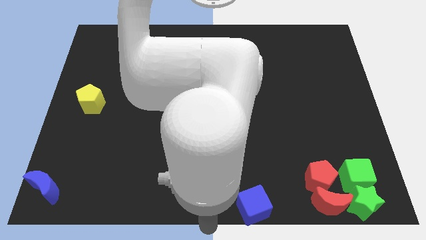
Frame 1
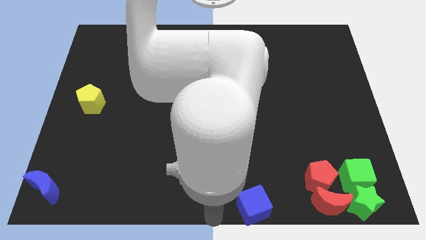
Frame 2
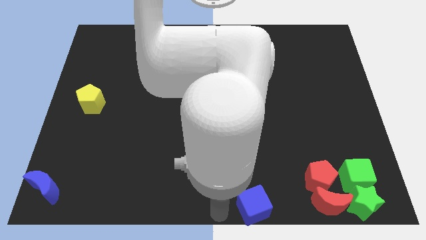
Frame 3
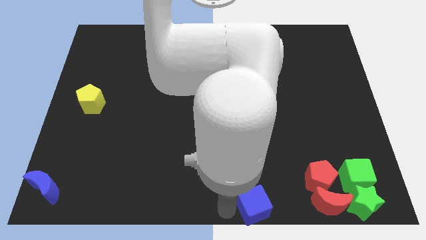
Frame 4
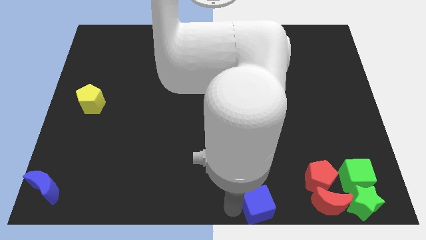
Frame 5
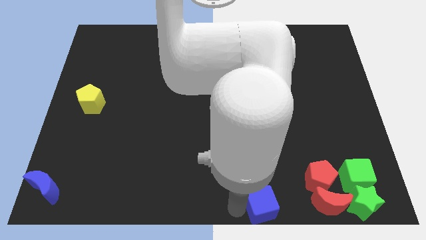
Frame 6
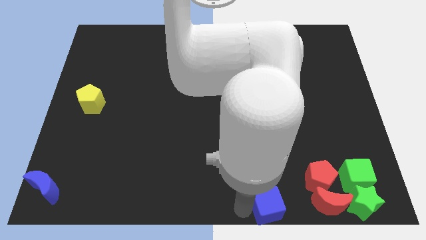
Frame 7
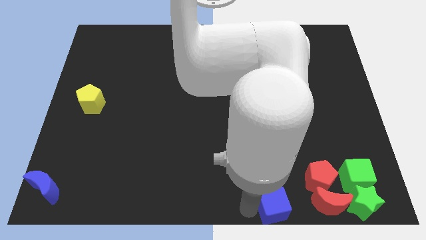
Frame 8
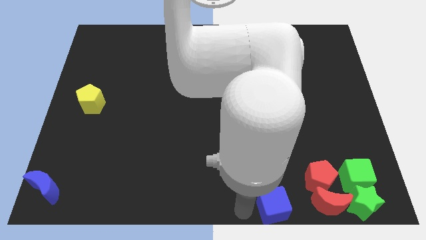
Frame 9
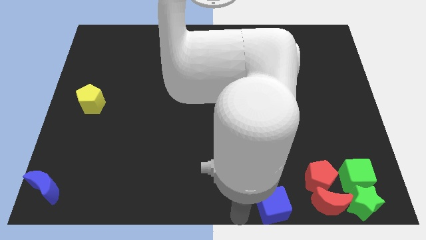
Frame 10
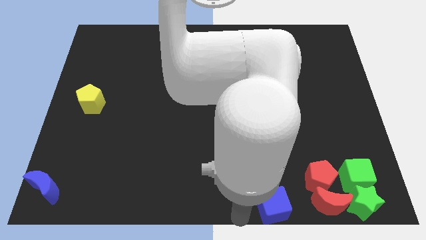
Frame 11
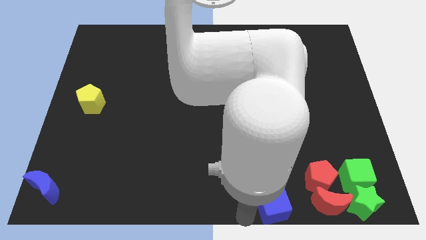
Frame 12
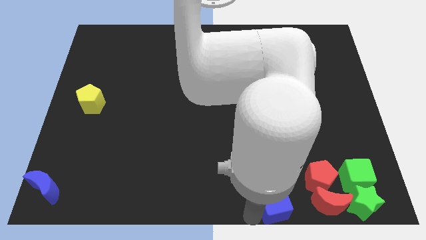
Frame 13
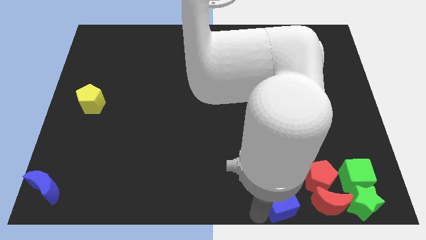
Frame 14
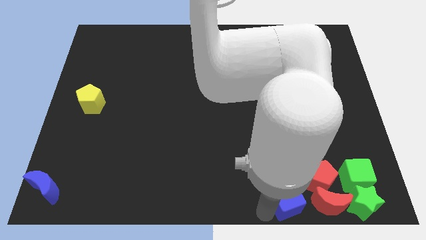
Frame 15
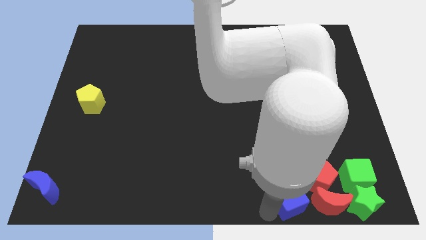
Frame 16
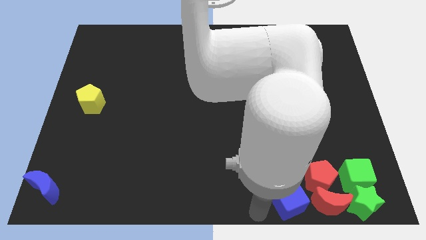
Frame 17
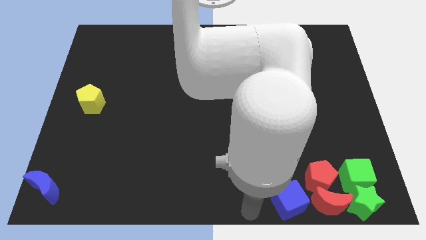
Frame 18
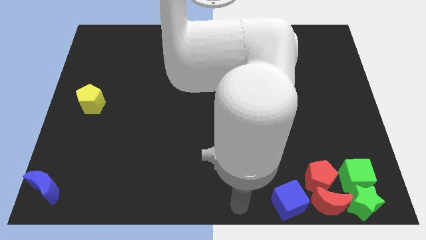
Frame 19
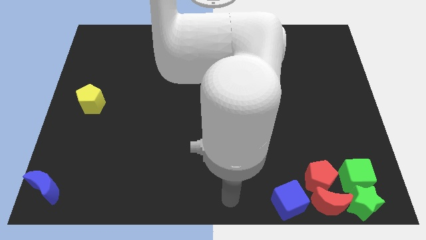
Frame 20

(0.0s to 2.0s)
place the blue cube to the left of the red blocks

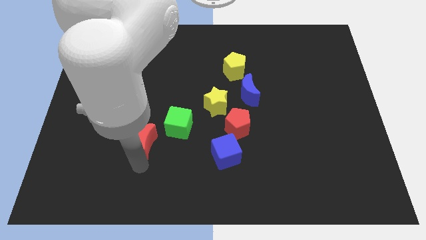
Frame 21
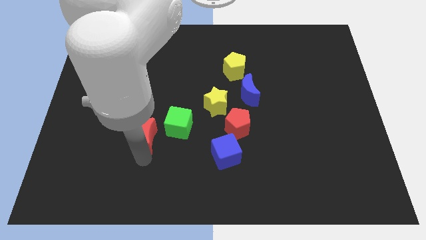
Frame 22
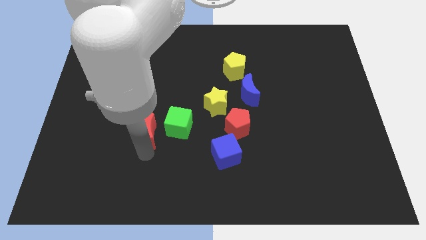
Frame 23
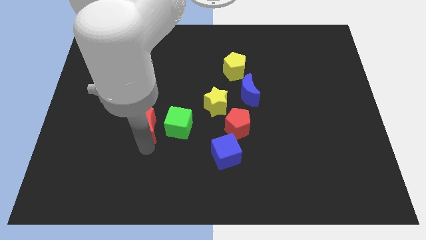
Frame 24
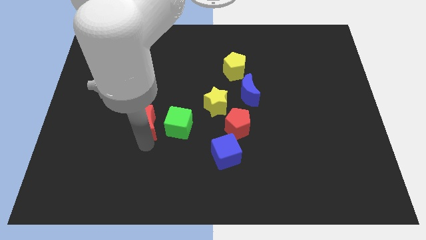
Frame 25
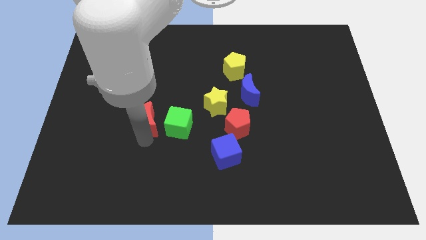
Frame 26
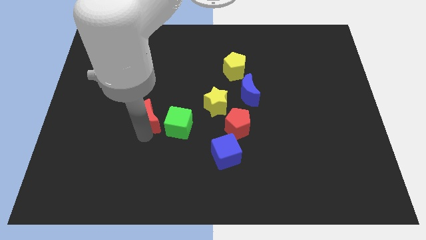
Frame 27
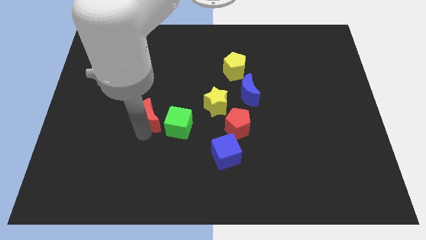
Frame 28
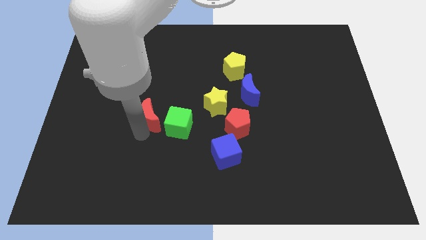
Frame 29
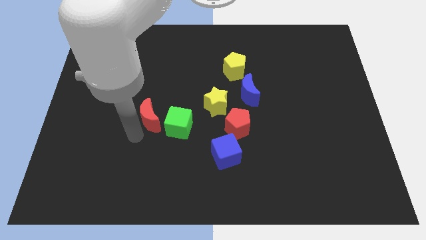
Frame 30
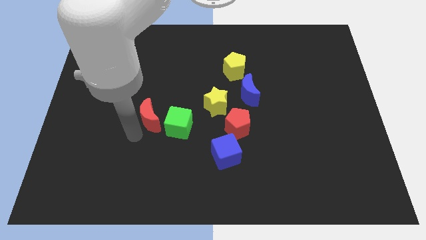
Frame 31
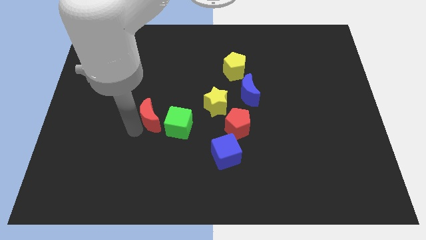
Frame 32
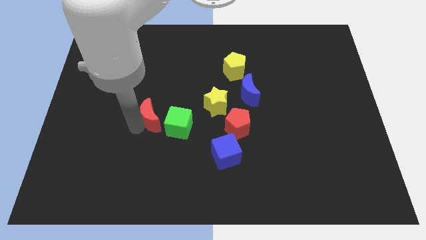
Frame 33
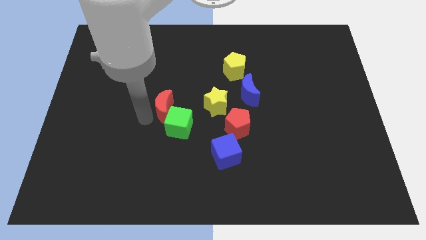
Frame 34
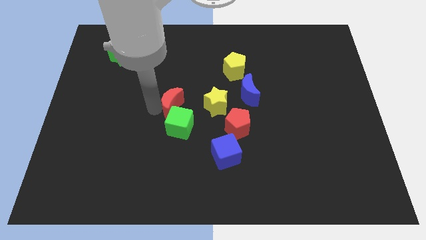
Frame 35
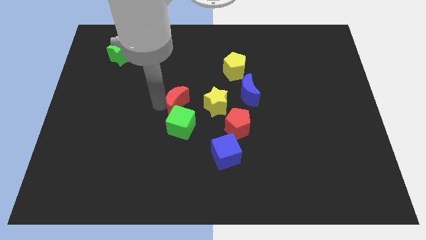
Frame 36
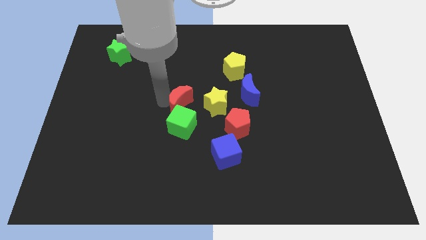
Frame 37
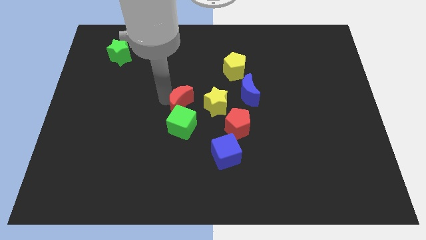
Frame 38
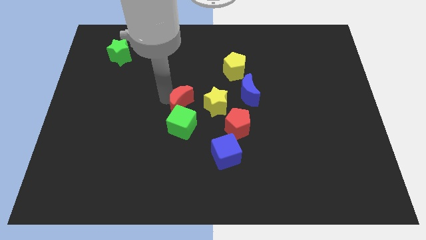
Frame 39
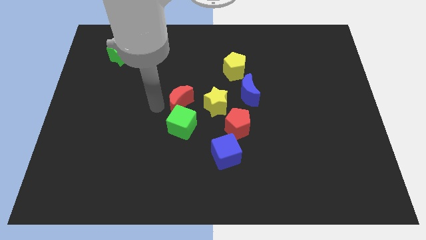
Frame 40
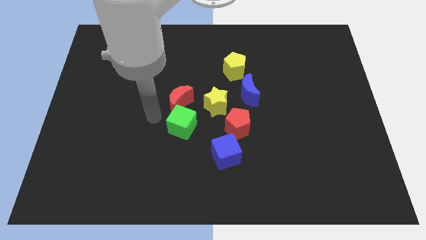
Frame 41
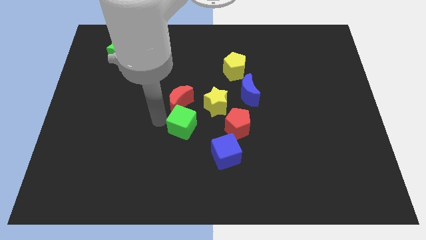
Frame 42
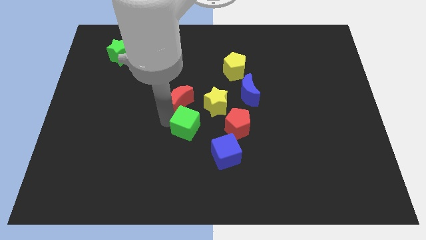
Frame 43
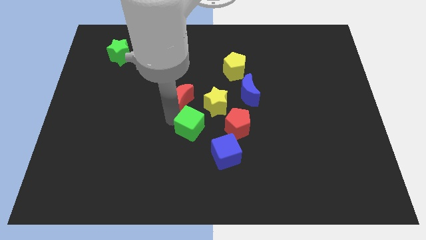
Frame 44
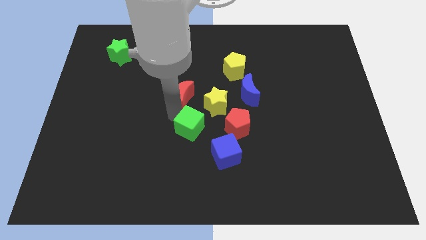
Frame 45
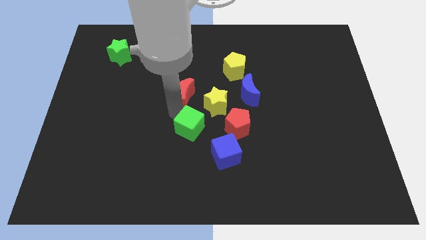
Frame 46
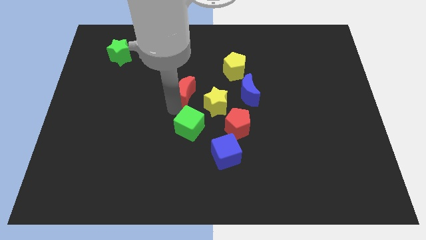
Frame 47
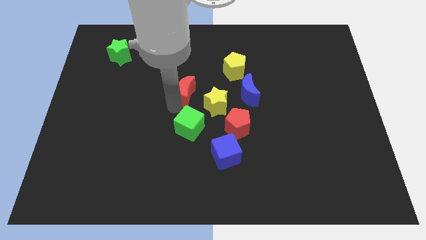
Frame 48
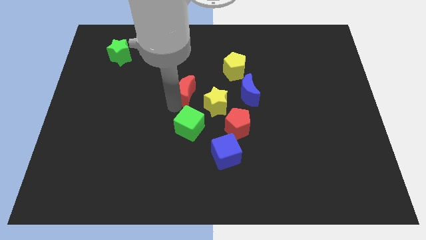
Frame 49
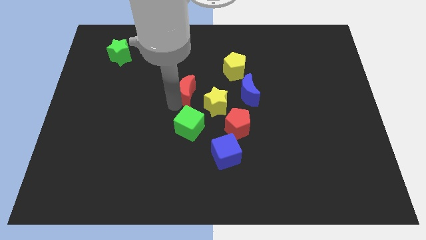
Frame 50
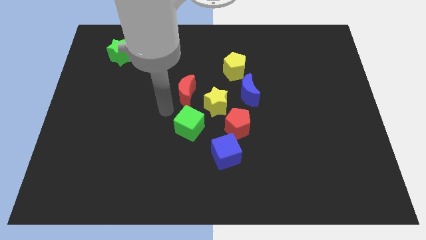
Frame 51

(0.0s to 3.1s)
move the red moon and green cube vertically

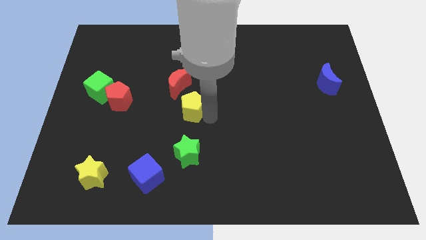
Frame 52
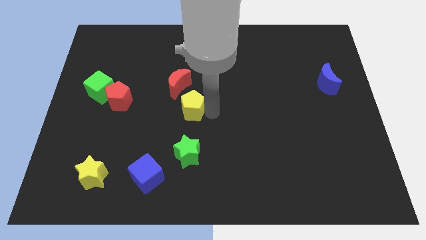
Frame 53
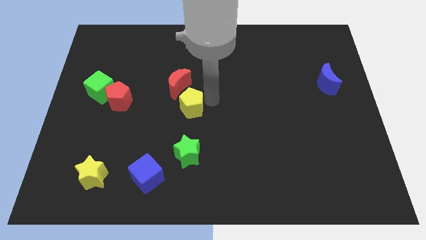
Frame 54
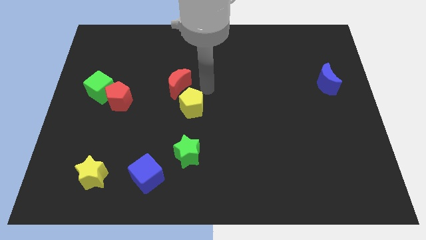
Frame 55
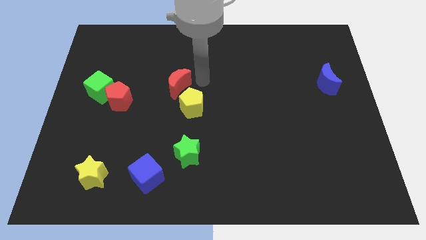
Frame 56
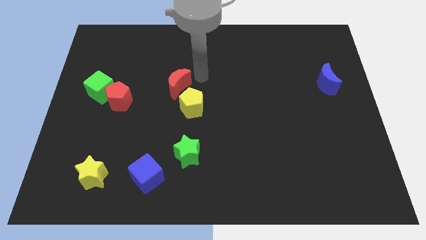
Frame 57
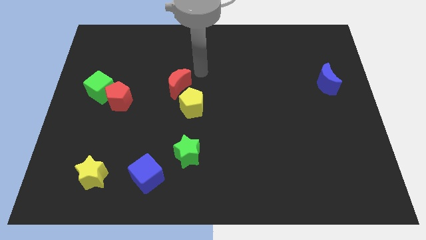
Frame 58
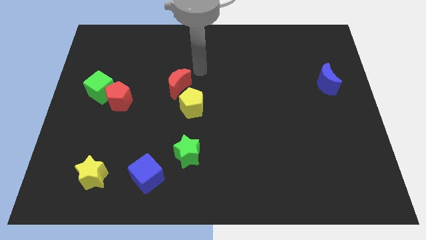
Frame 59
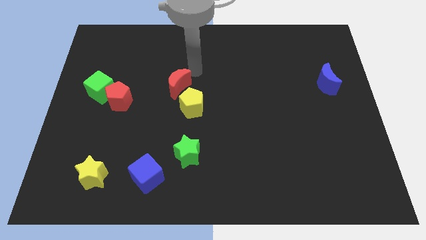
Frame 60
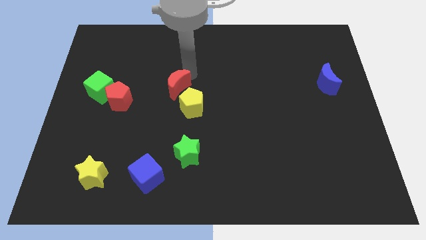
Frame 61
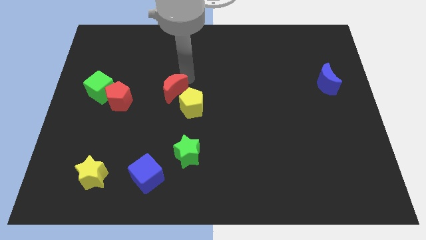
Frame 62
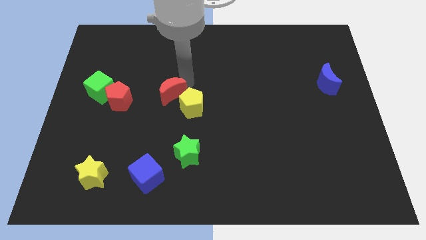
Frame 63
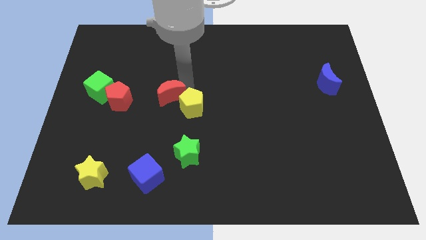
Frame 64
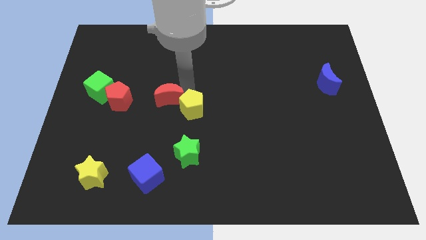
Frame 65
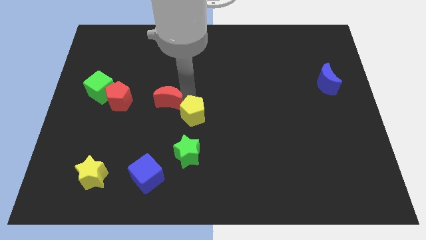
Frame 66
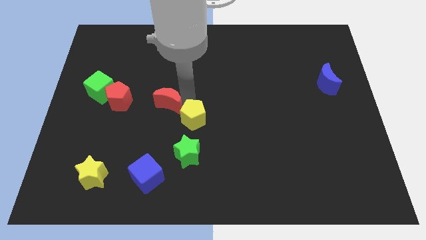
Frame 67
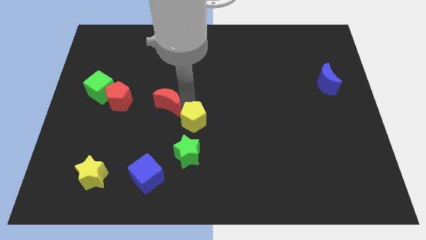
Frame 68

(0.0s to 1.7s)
place the red crescent parallel to the red pentagon

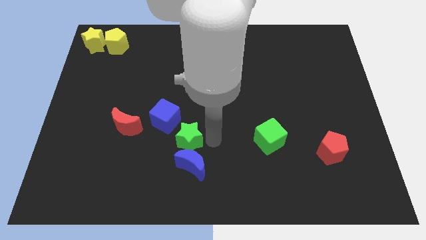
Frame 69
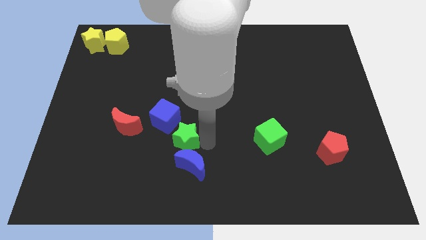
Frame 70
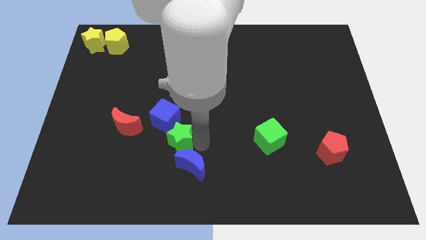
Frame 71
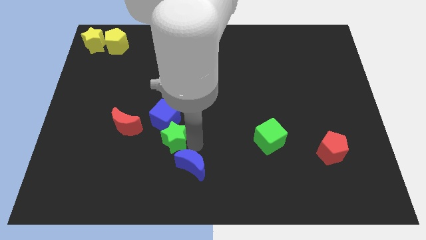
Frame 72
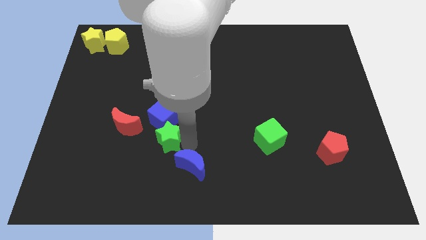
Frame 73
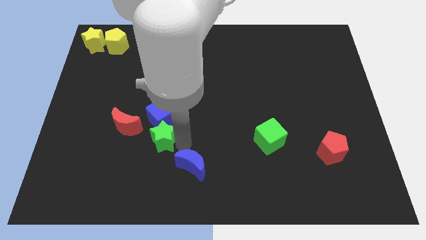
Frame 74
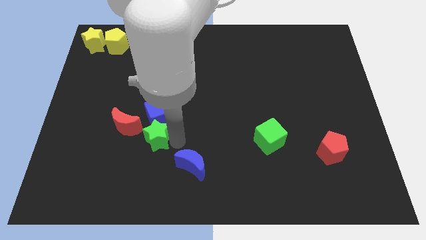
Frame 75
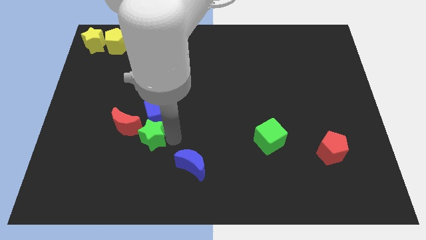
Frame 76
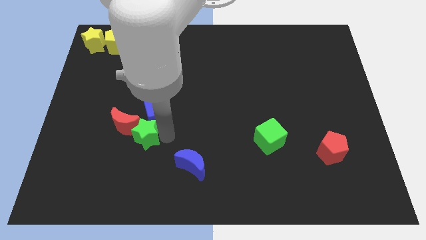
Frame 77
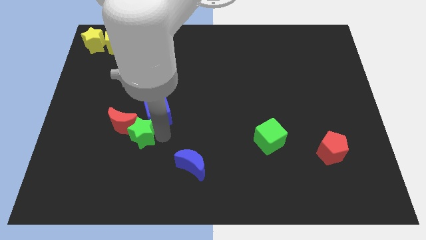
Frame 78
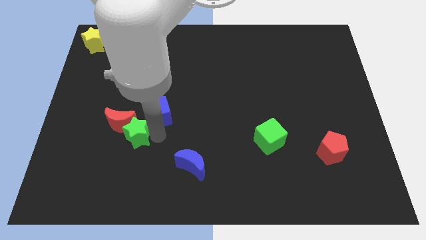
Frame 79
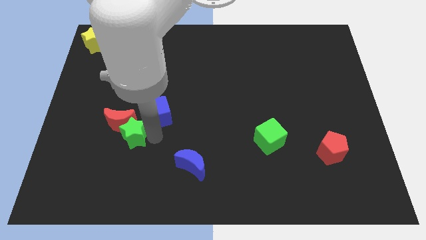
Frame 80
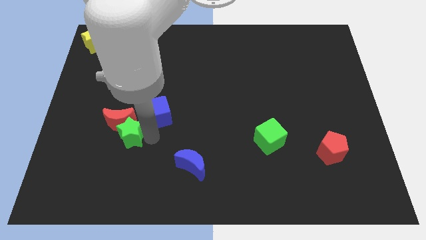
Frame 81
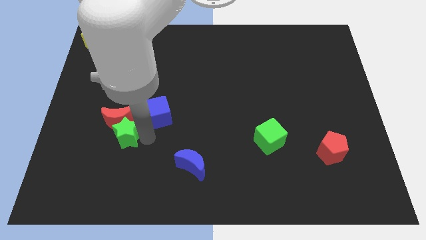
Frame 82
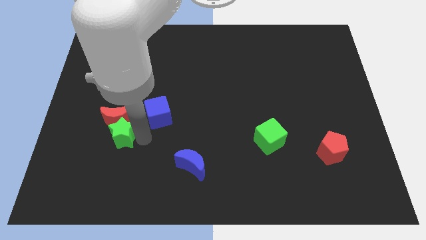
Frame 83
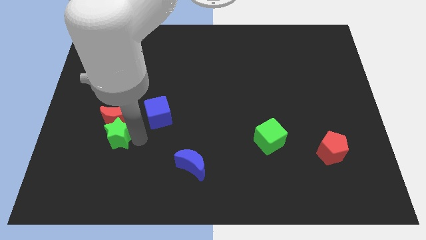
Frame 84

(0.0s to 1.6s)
move the green star to the bottom of the red crescent

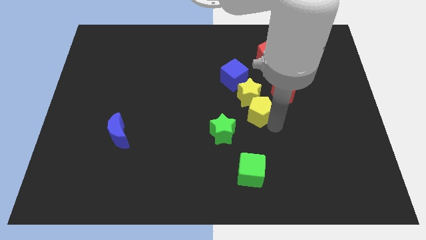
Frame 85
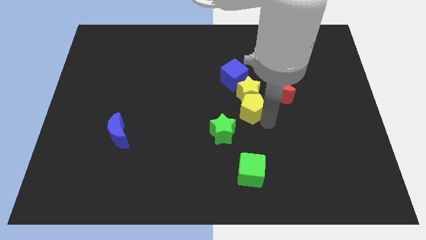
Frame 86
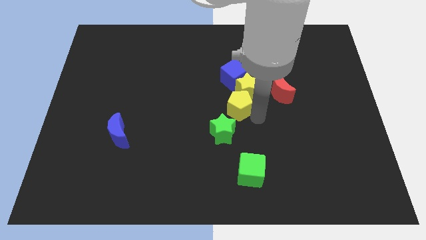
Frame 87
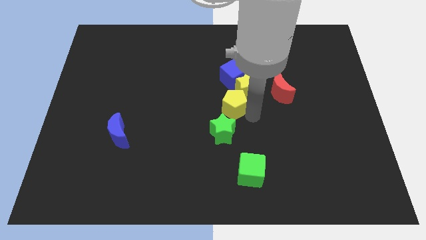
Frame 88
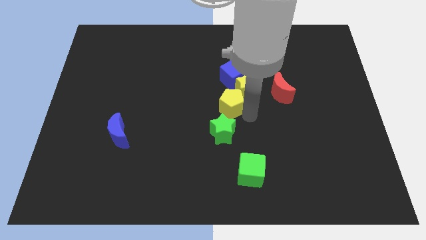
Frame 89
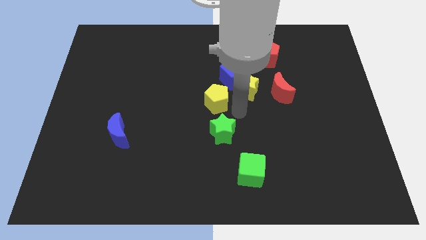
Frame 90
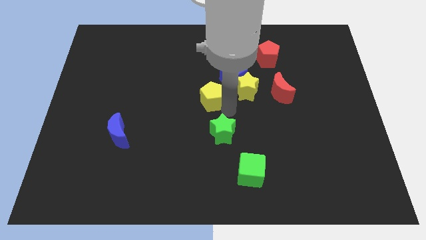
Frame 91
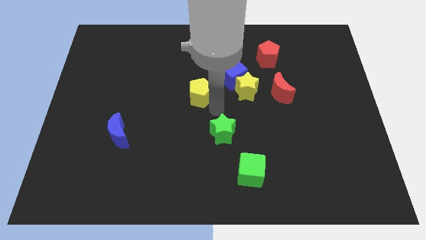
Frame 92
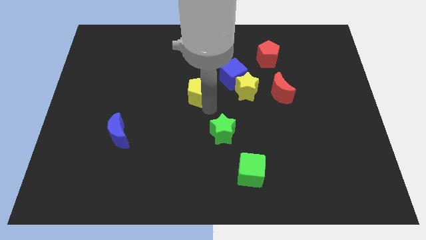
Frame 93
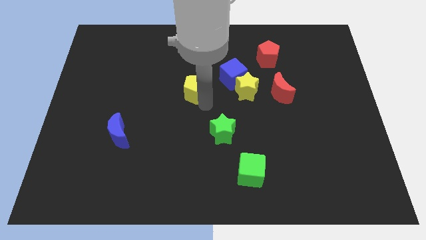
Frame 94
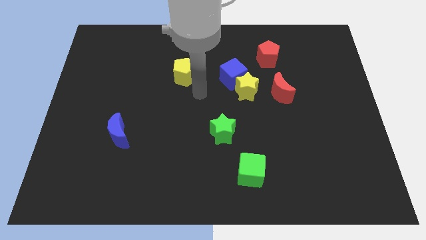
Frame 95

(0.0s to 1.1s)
separate yellow pentagon from yellow star
